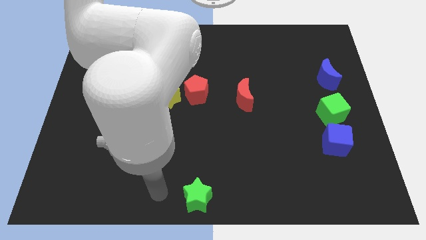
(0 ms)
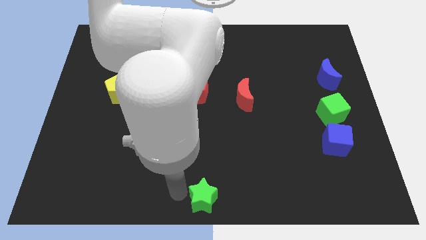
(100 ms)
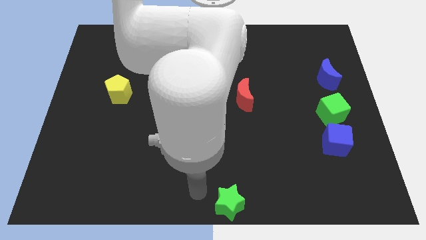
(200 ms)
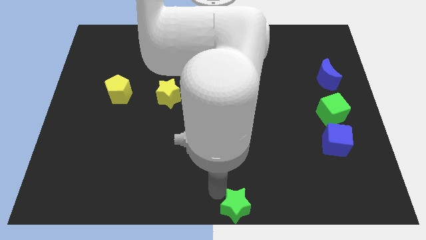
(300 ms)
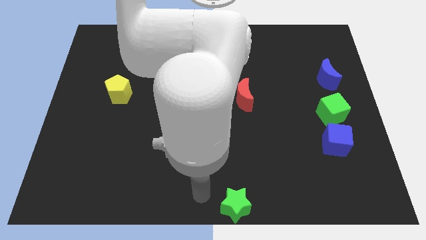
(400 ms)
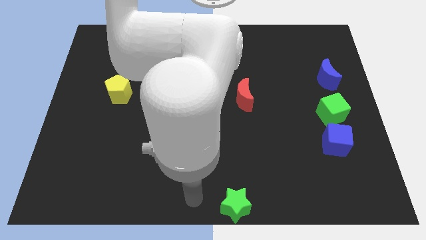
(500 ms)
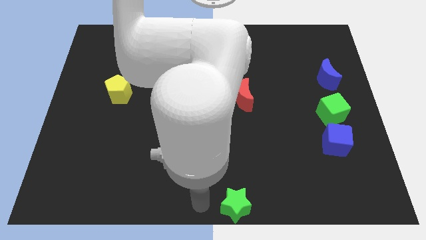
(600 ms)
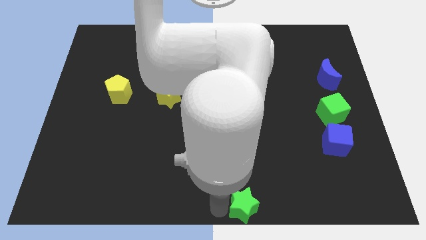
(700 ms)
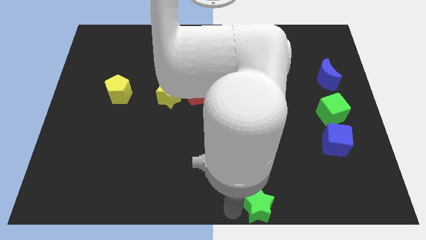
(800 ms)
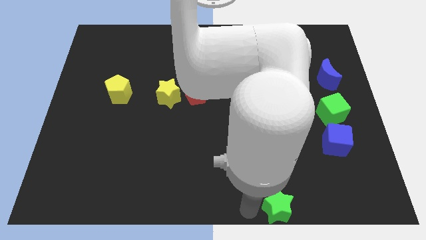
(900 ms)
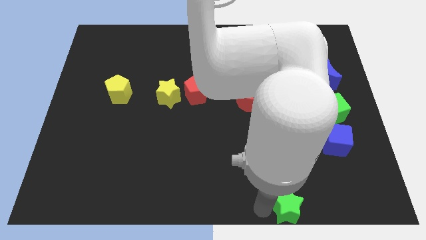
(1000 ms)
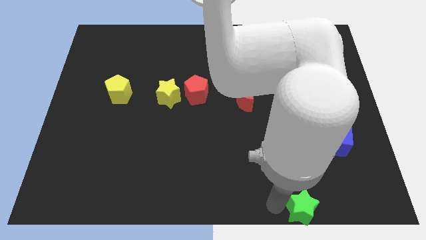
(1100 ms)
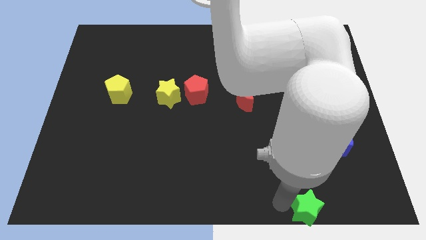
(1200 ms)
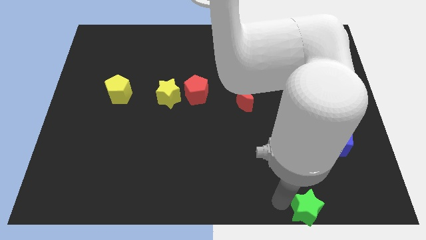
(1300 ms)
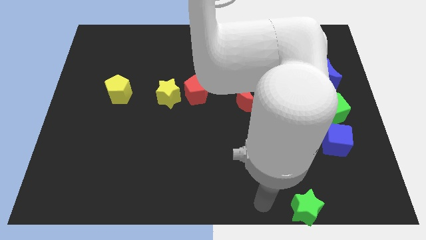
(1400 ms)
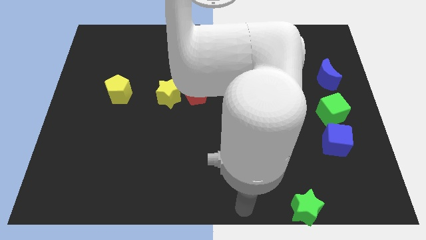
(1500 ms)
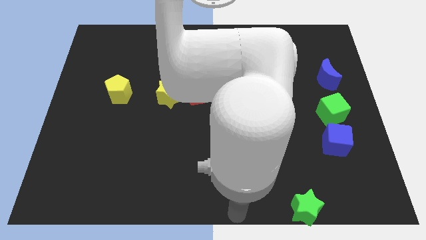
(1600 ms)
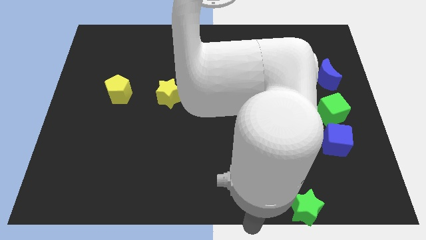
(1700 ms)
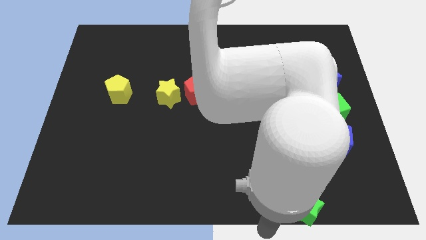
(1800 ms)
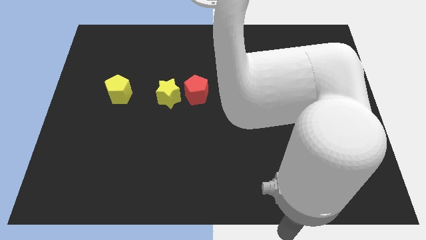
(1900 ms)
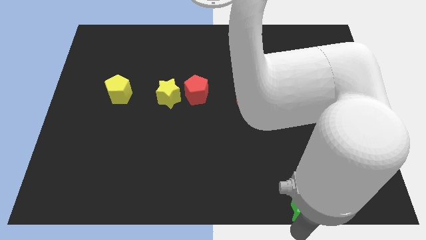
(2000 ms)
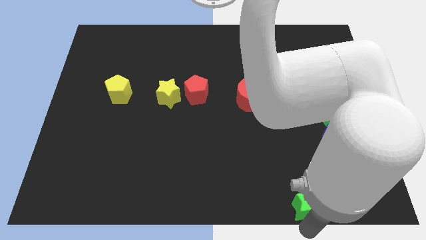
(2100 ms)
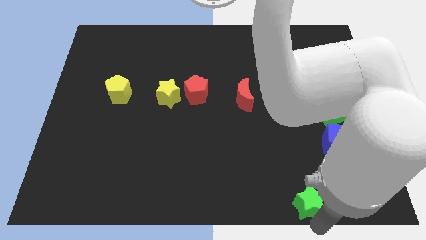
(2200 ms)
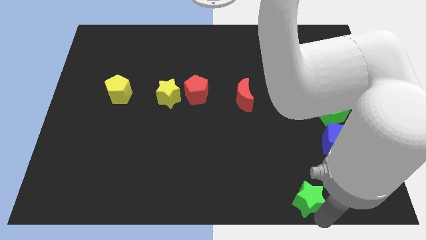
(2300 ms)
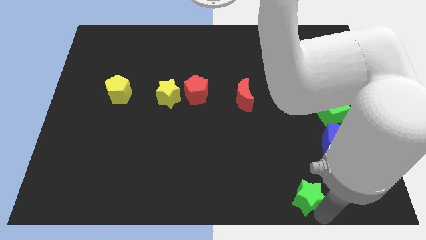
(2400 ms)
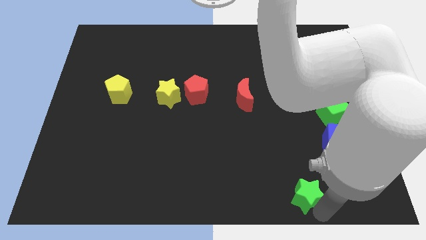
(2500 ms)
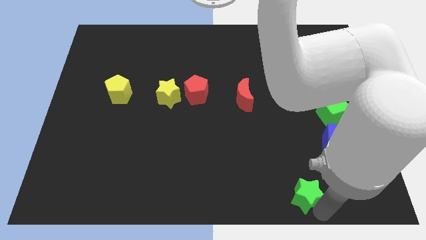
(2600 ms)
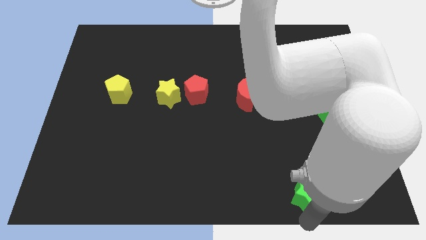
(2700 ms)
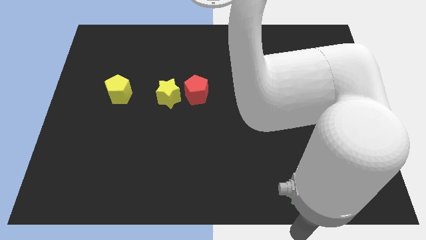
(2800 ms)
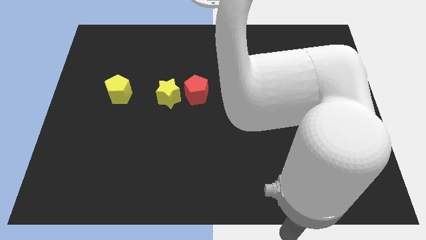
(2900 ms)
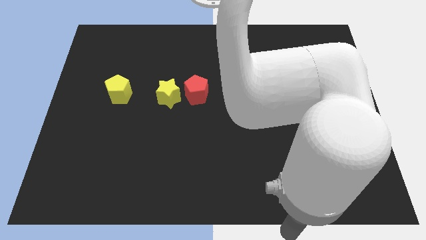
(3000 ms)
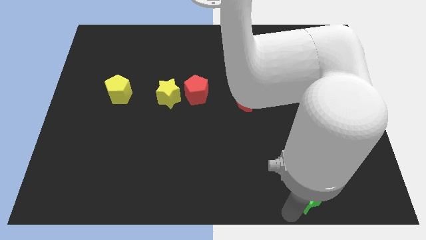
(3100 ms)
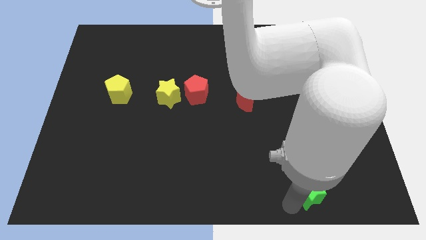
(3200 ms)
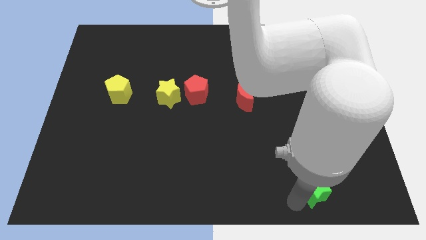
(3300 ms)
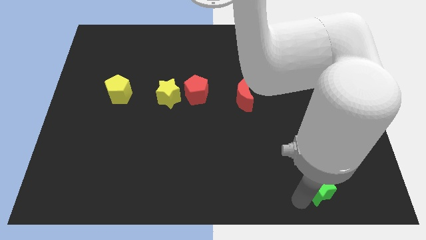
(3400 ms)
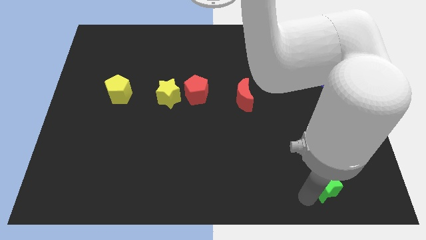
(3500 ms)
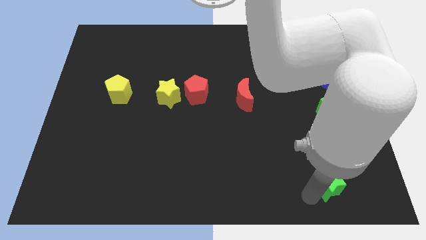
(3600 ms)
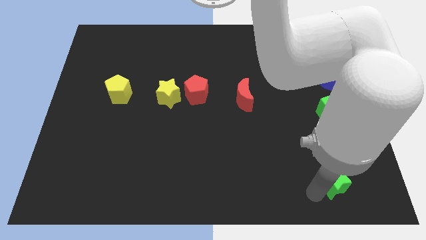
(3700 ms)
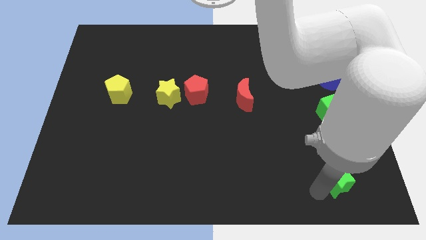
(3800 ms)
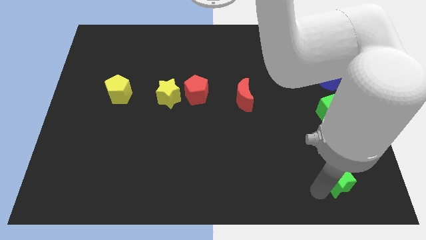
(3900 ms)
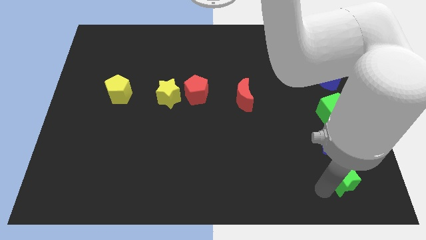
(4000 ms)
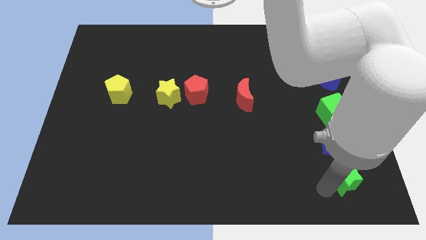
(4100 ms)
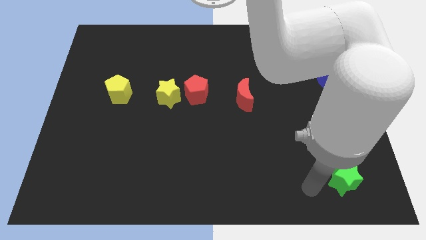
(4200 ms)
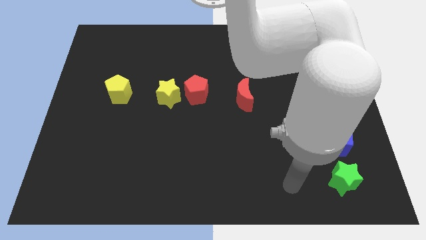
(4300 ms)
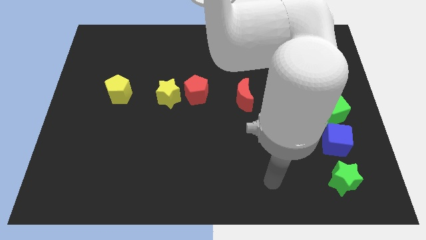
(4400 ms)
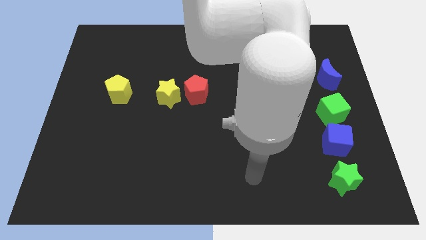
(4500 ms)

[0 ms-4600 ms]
place the green star below the blue cube

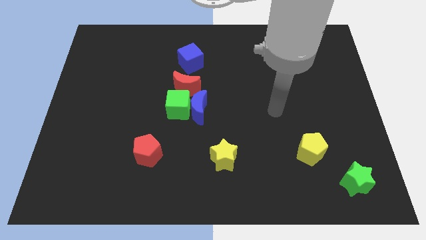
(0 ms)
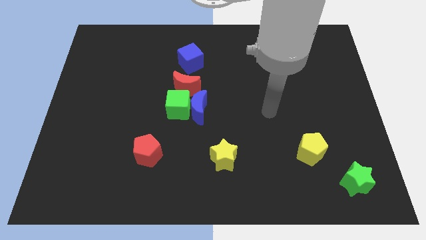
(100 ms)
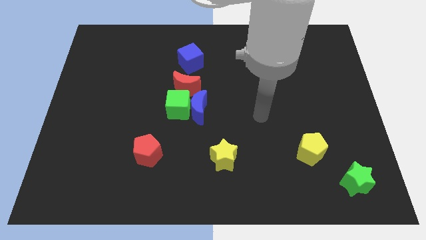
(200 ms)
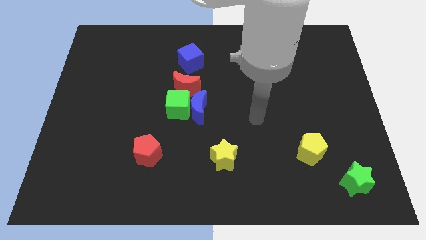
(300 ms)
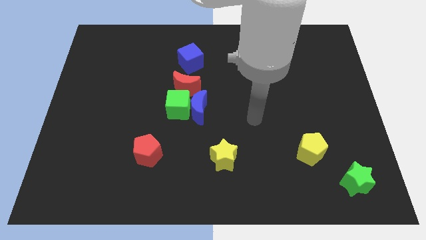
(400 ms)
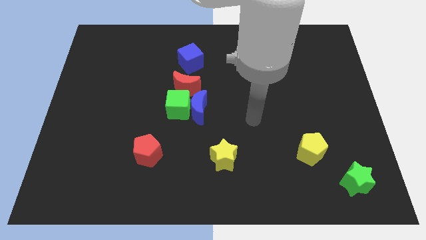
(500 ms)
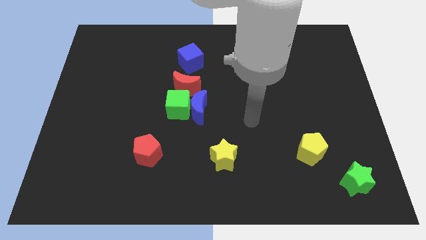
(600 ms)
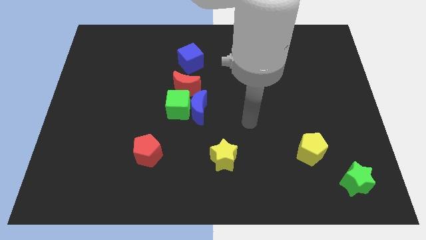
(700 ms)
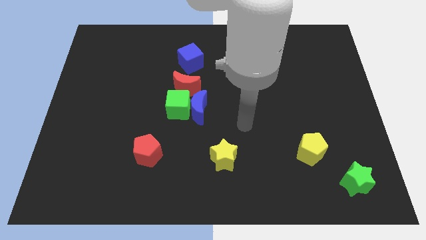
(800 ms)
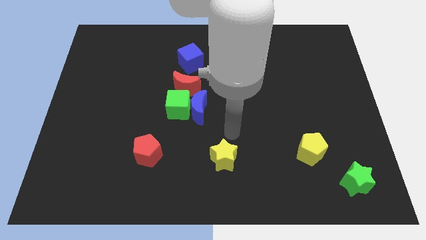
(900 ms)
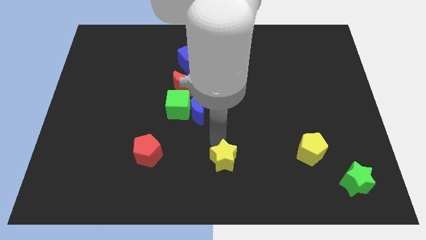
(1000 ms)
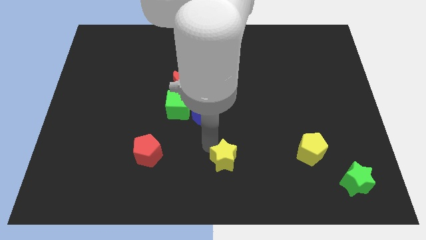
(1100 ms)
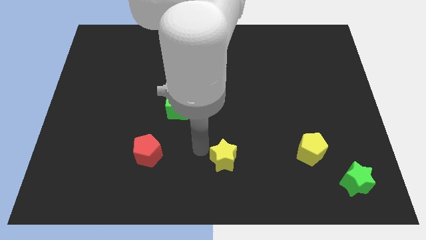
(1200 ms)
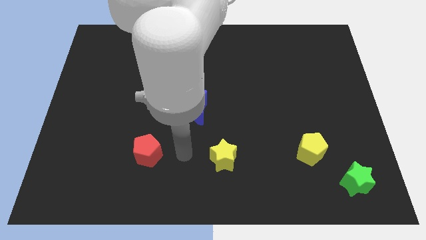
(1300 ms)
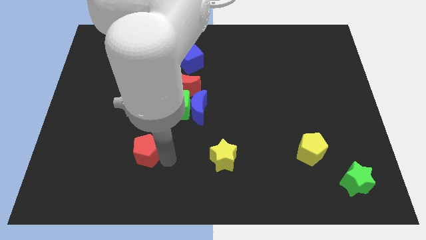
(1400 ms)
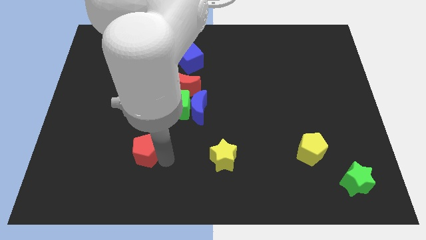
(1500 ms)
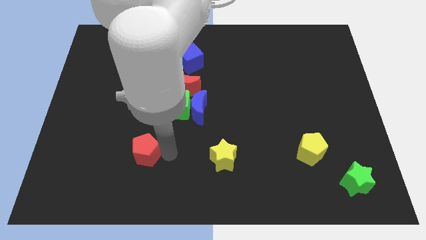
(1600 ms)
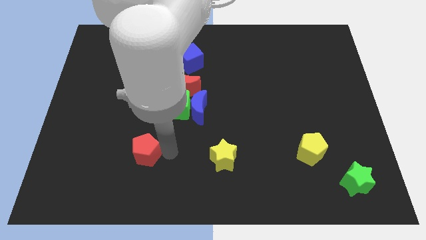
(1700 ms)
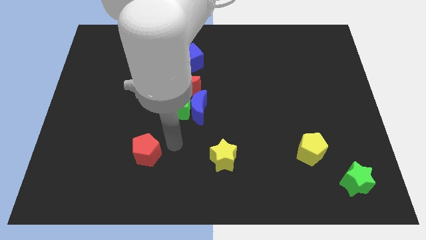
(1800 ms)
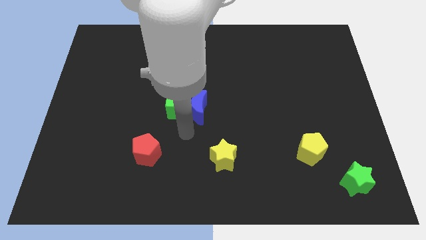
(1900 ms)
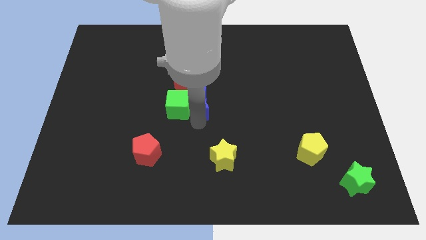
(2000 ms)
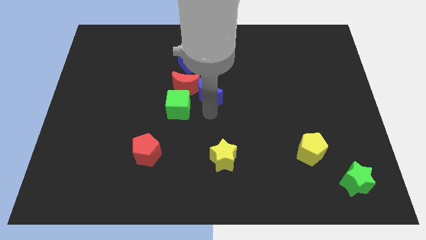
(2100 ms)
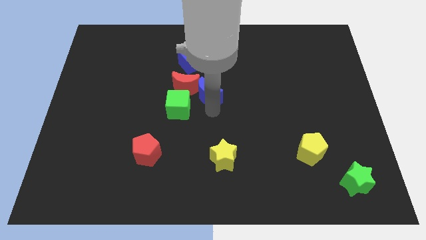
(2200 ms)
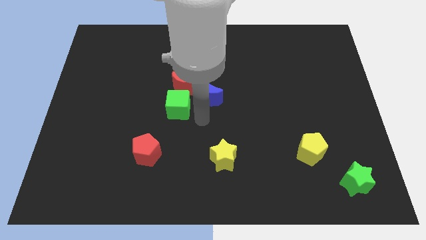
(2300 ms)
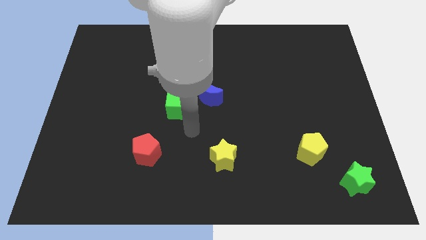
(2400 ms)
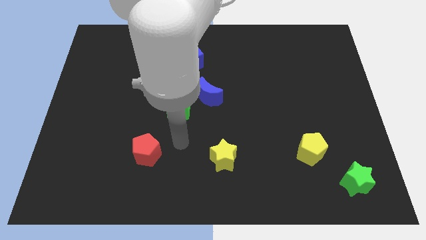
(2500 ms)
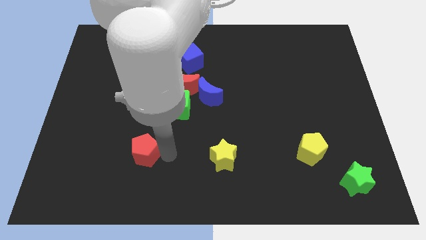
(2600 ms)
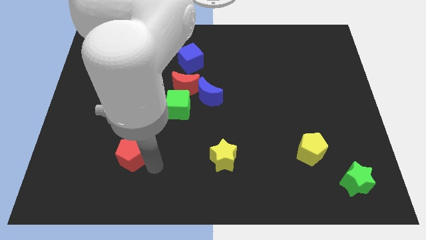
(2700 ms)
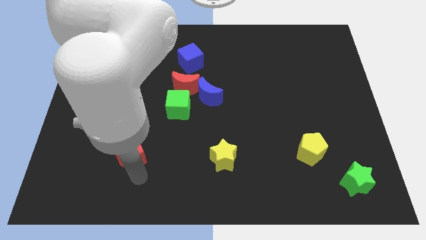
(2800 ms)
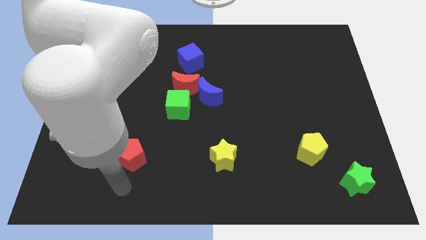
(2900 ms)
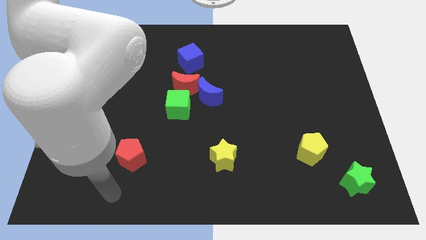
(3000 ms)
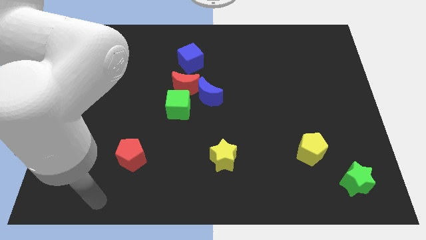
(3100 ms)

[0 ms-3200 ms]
move the red pentagon and blue crescent diagonal to each other

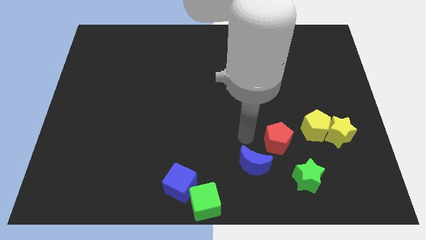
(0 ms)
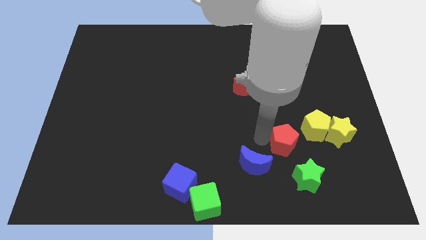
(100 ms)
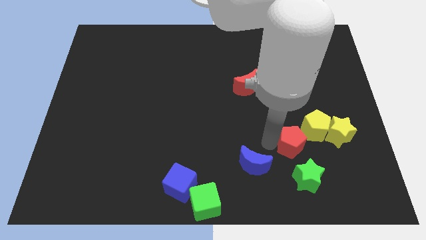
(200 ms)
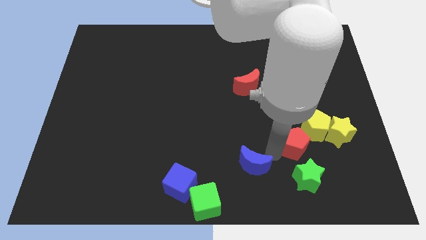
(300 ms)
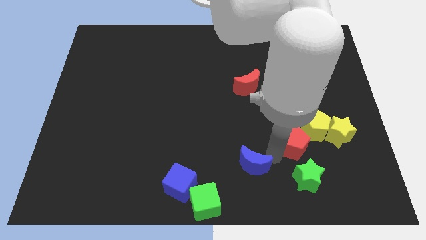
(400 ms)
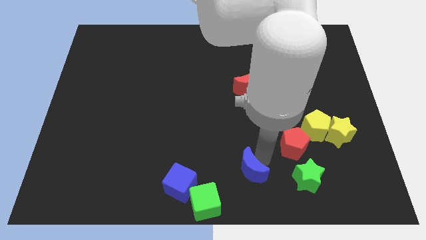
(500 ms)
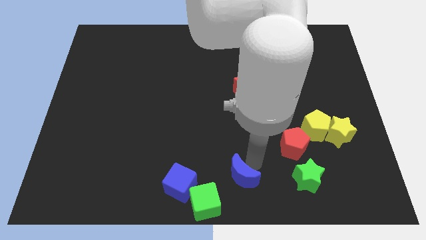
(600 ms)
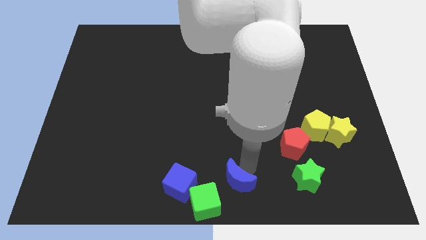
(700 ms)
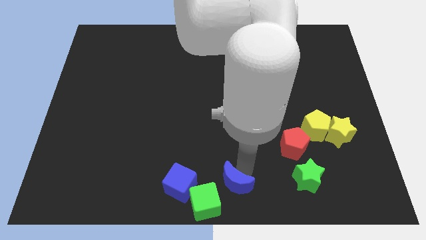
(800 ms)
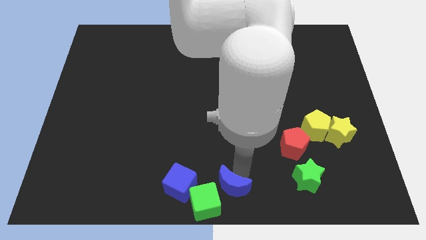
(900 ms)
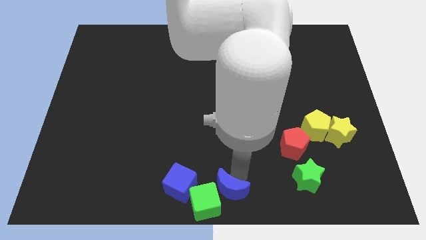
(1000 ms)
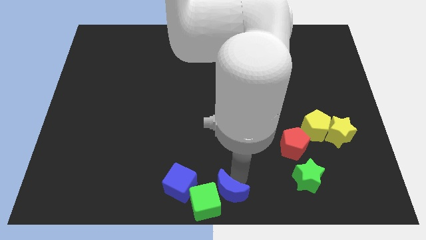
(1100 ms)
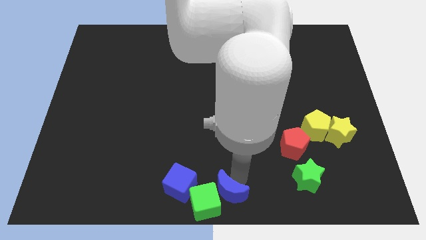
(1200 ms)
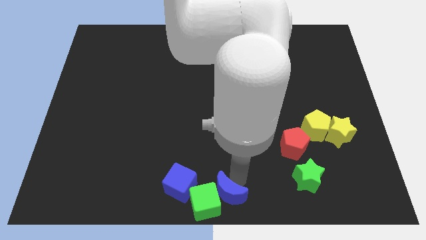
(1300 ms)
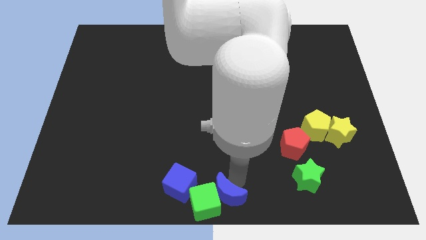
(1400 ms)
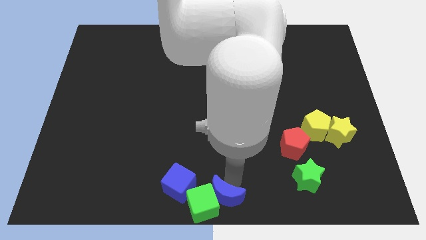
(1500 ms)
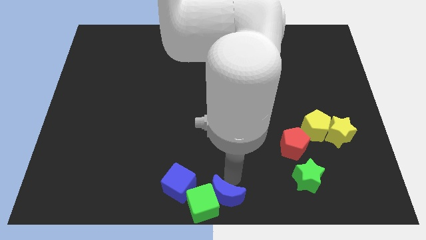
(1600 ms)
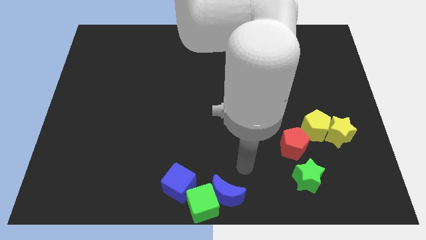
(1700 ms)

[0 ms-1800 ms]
separate the red pentagon and blue moon
